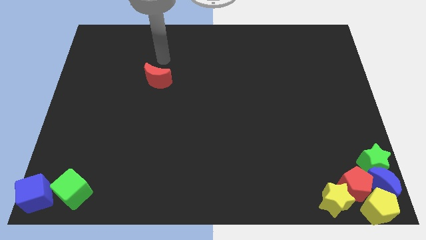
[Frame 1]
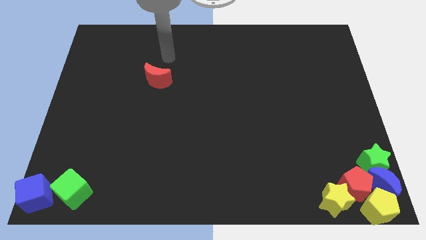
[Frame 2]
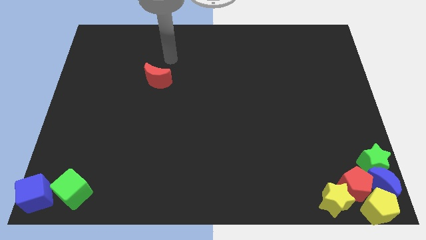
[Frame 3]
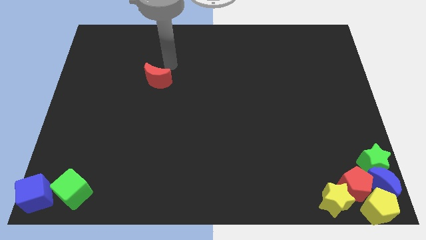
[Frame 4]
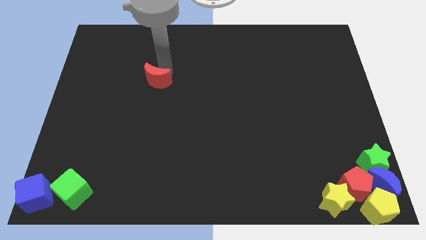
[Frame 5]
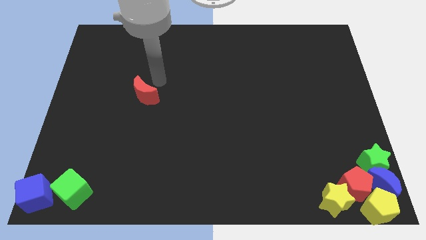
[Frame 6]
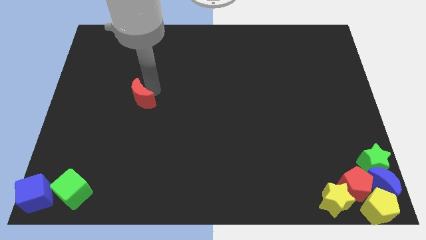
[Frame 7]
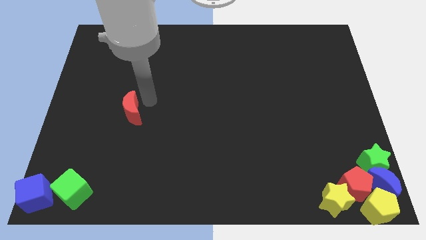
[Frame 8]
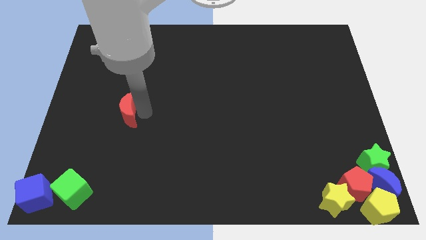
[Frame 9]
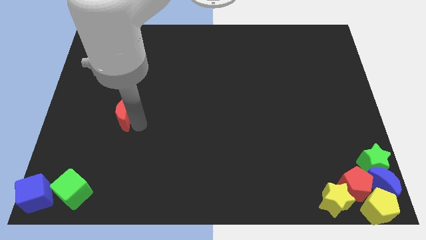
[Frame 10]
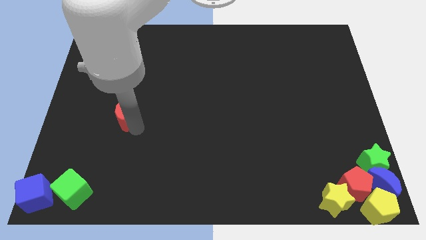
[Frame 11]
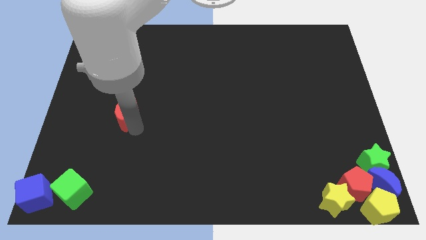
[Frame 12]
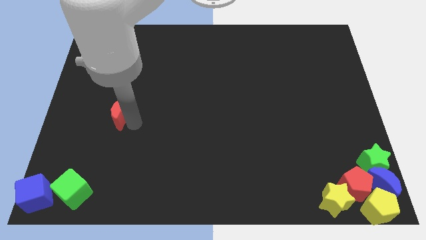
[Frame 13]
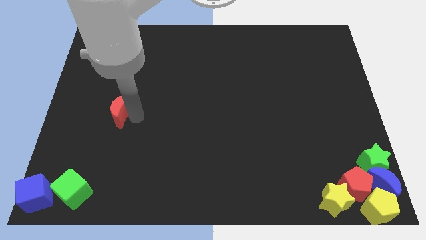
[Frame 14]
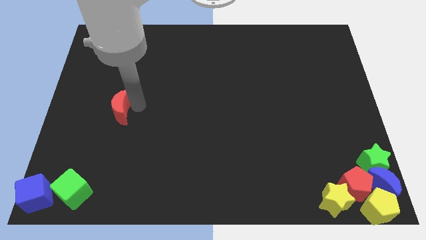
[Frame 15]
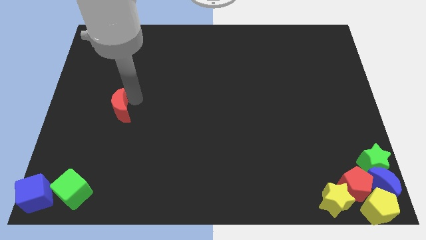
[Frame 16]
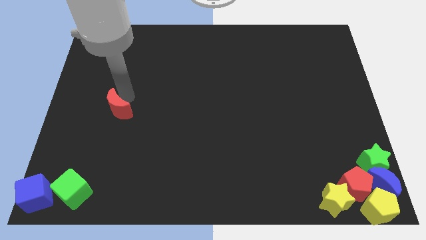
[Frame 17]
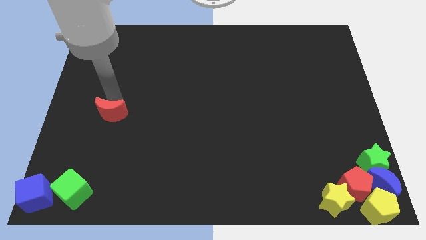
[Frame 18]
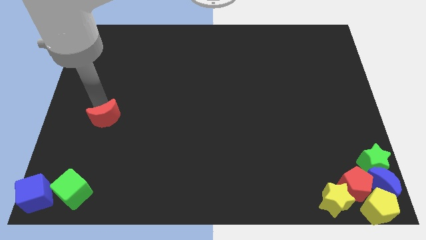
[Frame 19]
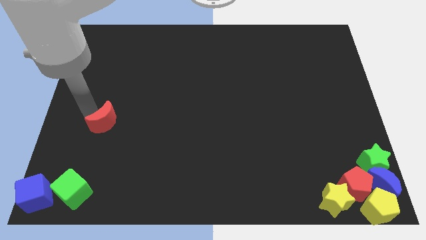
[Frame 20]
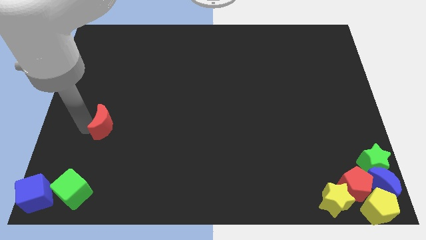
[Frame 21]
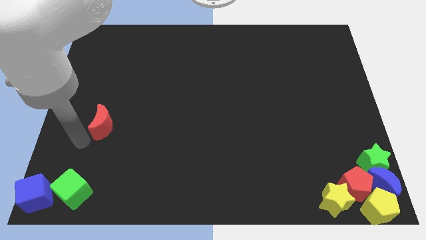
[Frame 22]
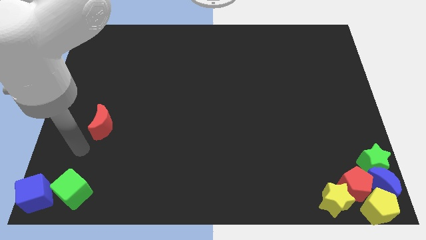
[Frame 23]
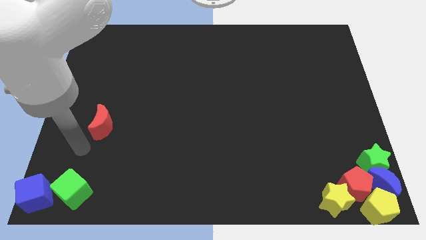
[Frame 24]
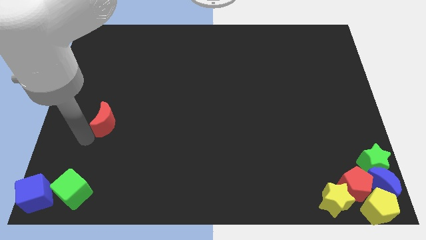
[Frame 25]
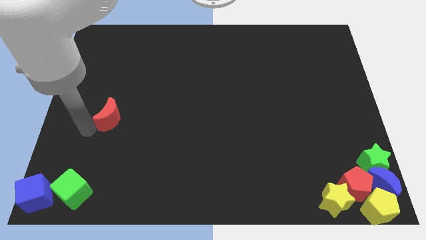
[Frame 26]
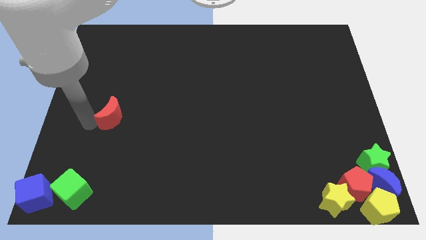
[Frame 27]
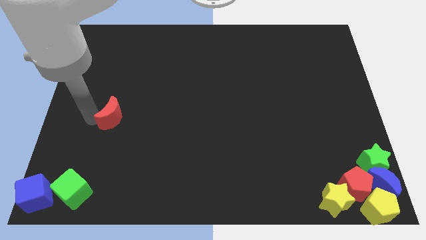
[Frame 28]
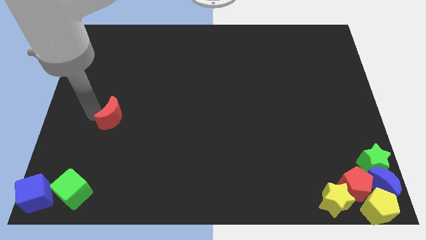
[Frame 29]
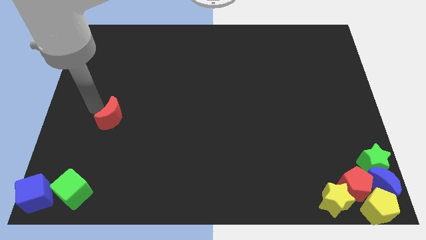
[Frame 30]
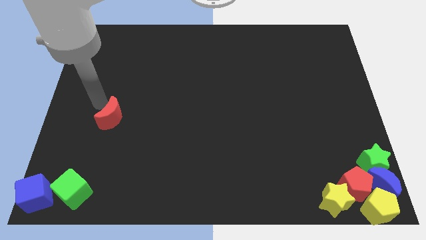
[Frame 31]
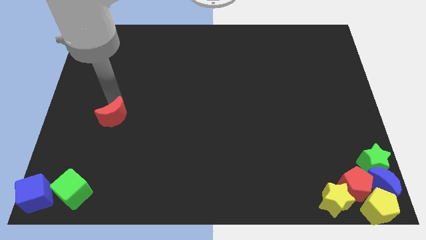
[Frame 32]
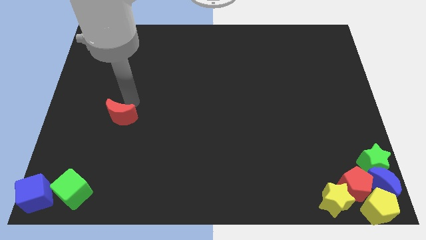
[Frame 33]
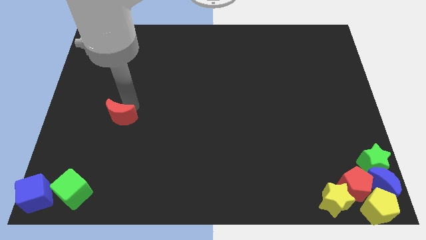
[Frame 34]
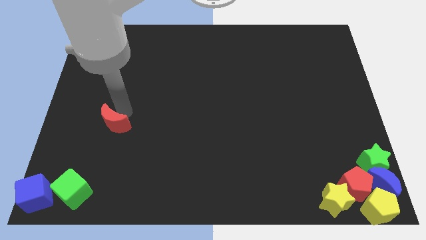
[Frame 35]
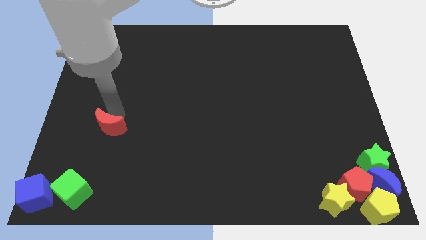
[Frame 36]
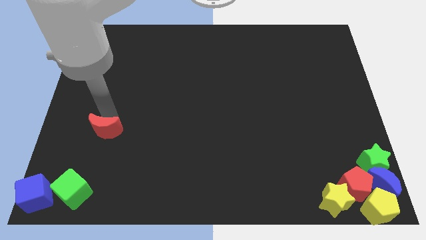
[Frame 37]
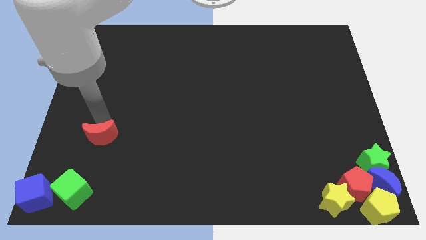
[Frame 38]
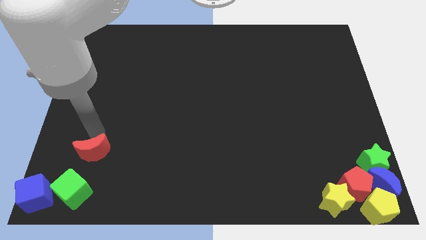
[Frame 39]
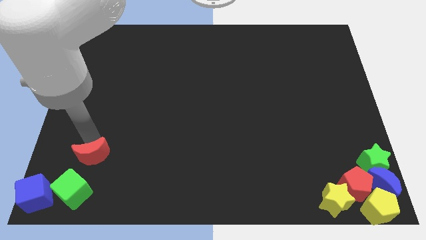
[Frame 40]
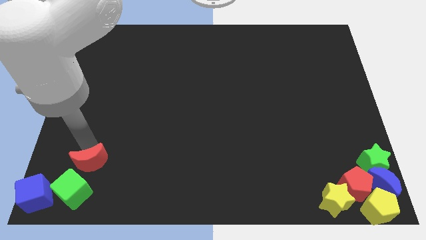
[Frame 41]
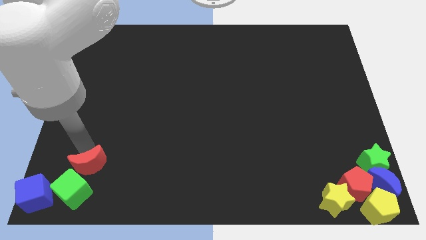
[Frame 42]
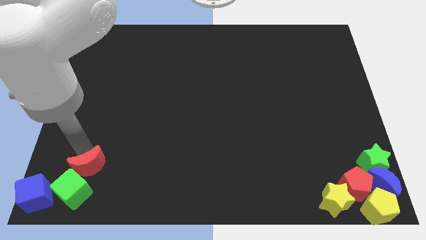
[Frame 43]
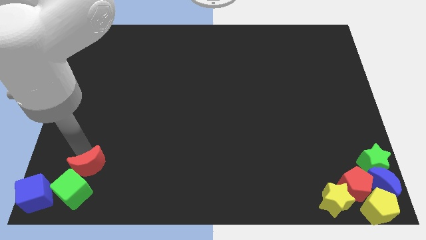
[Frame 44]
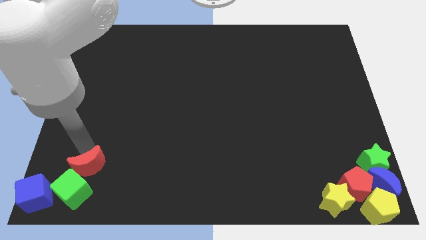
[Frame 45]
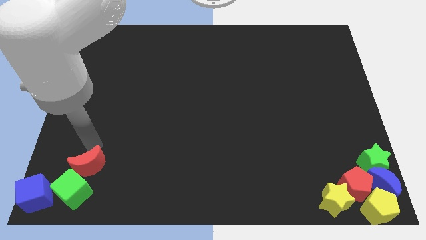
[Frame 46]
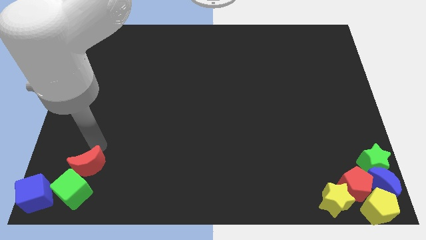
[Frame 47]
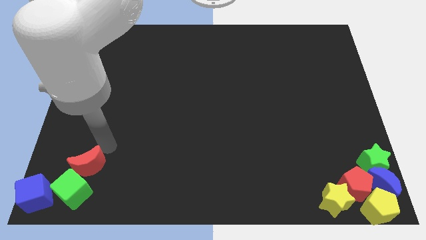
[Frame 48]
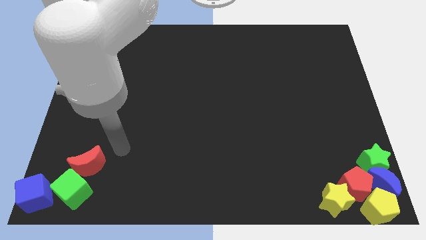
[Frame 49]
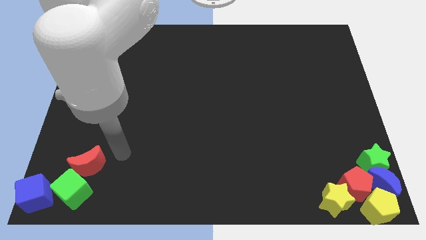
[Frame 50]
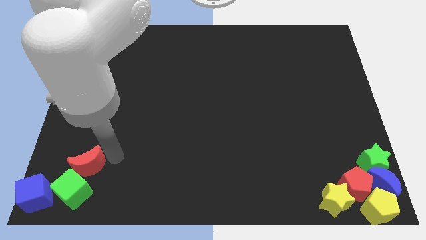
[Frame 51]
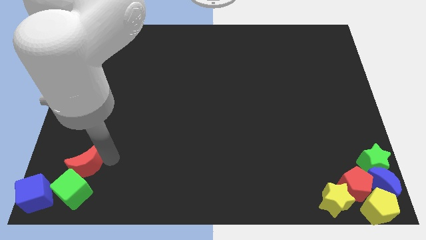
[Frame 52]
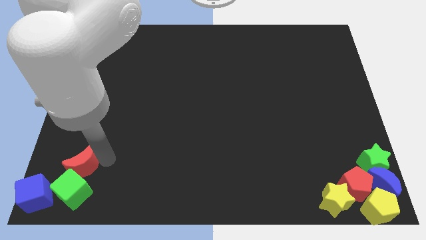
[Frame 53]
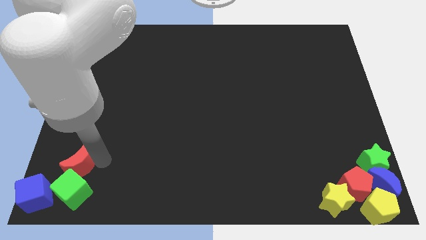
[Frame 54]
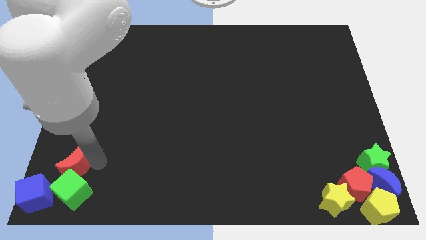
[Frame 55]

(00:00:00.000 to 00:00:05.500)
move the red crescent to the top right of the blue cube

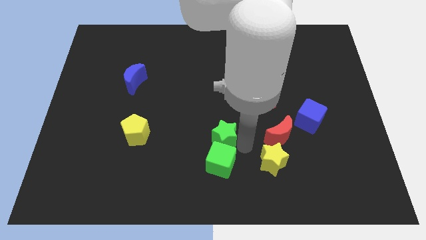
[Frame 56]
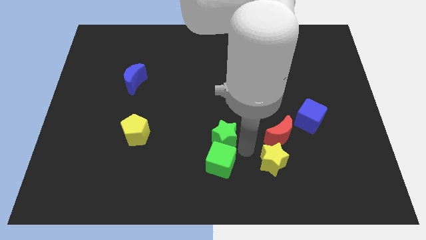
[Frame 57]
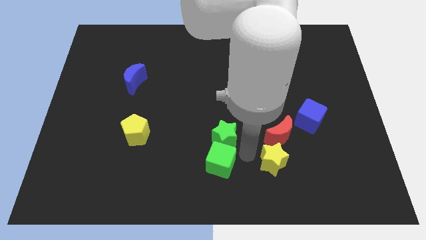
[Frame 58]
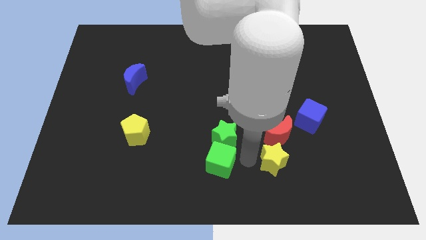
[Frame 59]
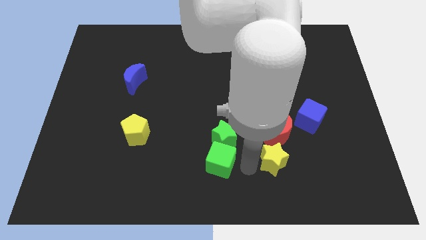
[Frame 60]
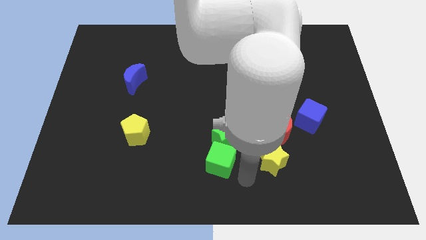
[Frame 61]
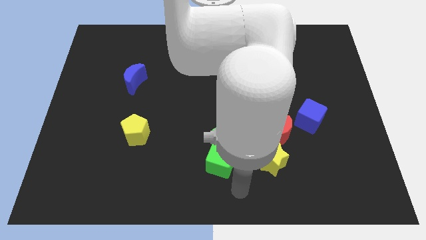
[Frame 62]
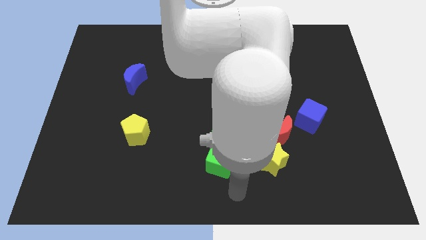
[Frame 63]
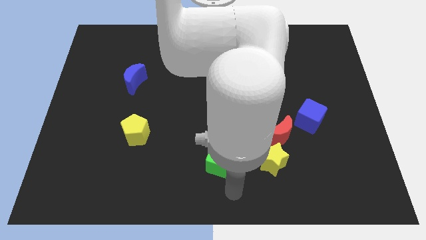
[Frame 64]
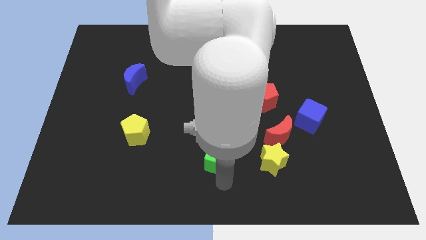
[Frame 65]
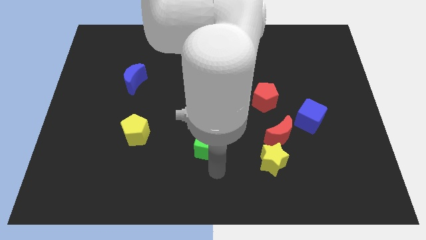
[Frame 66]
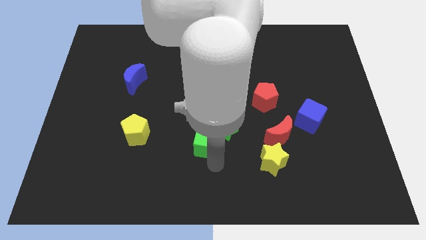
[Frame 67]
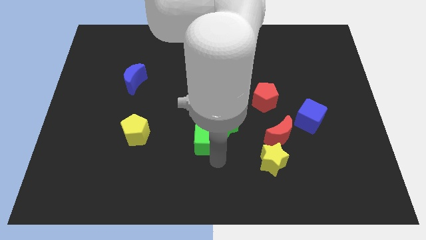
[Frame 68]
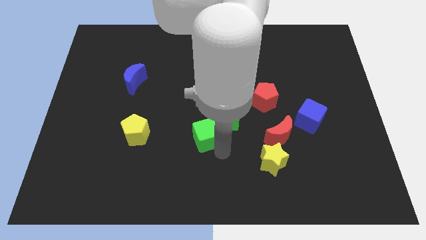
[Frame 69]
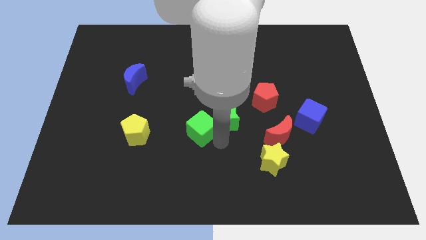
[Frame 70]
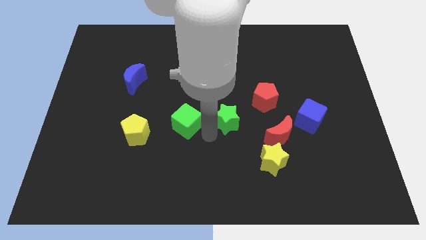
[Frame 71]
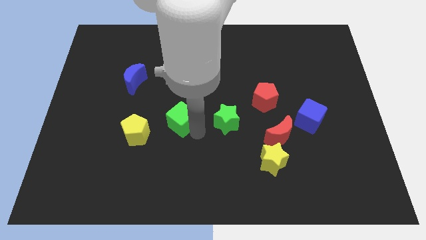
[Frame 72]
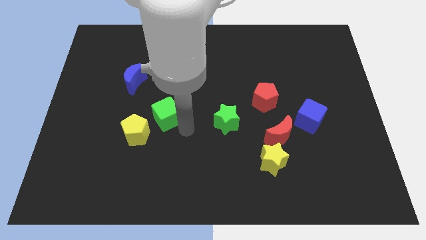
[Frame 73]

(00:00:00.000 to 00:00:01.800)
drag the green cube close to the yellow pentagon

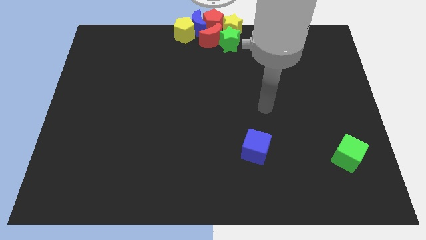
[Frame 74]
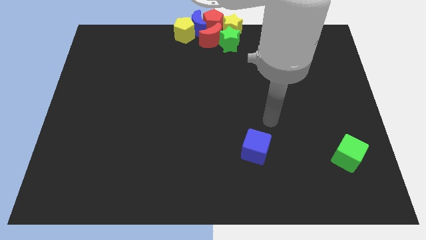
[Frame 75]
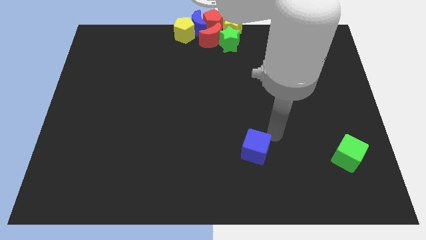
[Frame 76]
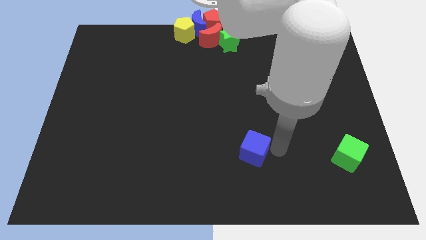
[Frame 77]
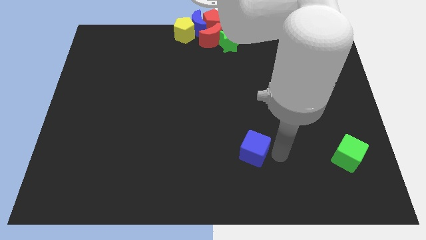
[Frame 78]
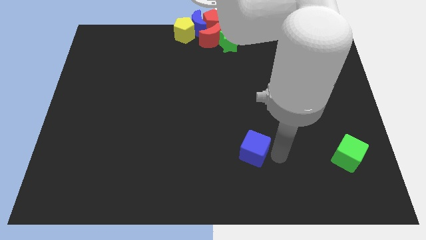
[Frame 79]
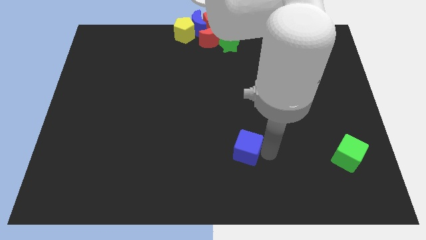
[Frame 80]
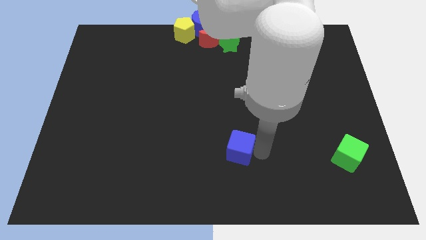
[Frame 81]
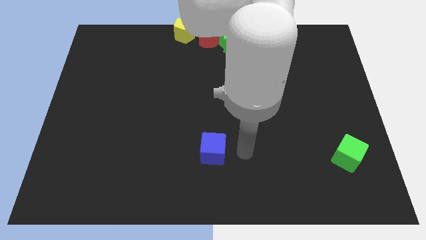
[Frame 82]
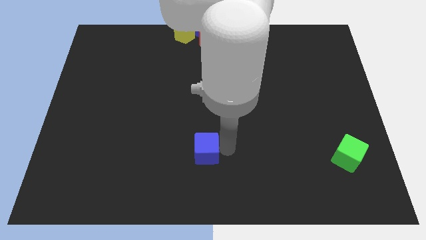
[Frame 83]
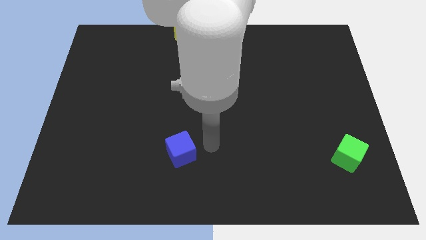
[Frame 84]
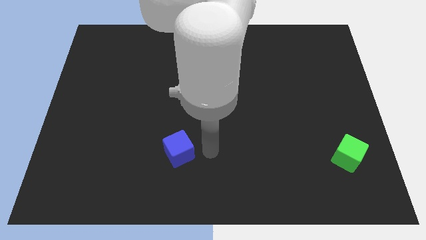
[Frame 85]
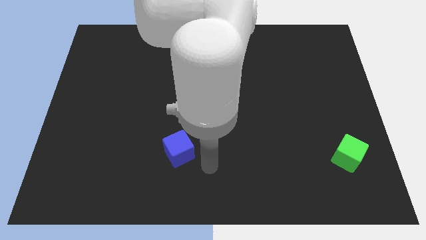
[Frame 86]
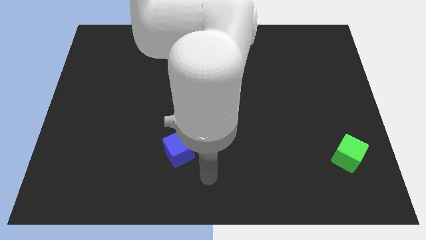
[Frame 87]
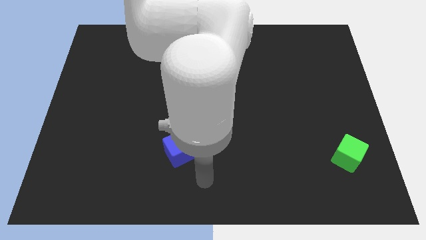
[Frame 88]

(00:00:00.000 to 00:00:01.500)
move the blue cube slightly to the left side of the board

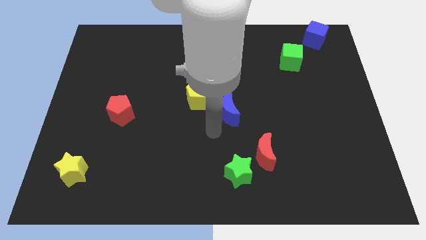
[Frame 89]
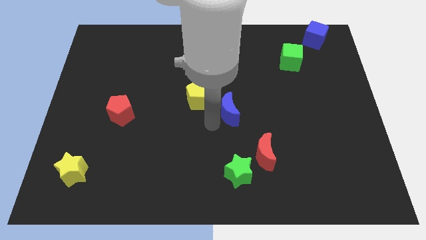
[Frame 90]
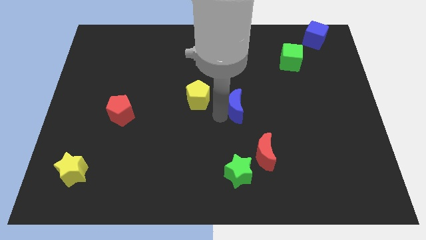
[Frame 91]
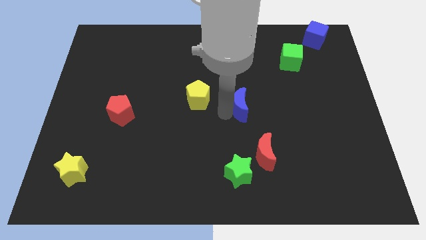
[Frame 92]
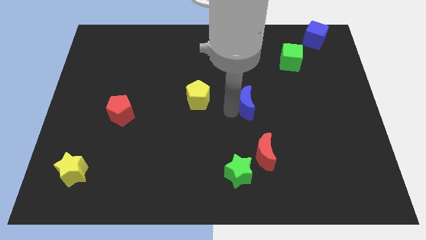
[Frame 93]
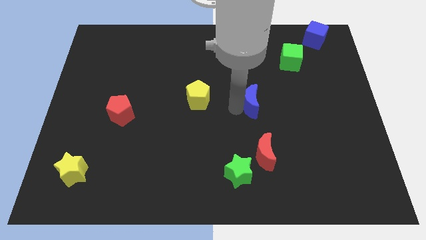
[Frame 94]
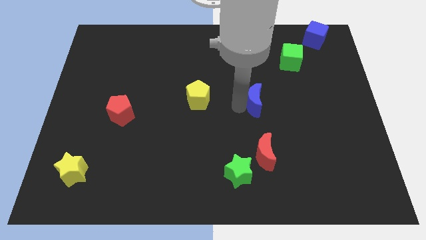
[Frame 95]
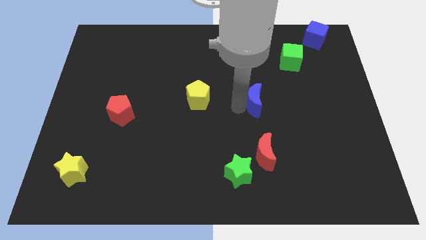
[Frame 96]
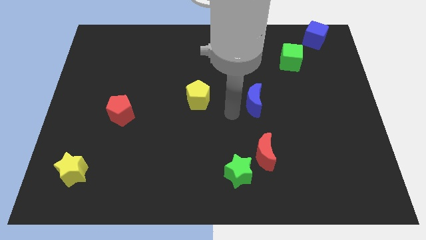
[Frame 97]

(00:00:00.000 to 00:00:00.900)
place blue moon above red crescent
